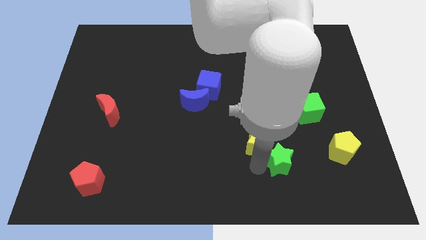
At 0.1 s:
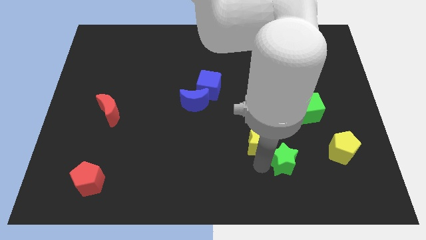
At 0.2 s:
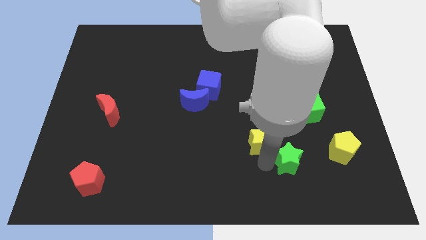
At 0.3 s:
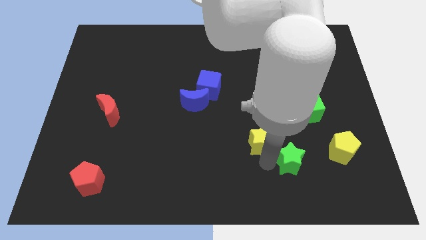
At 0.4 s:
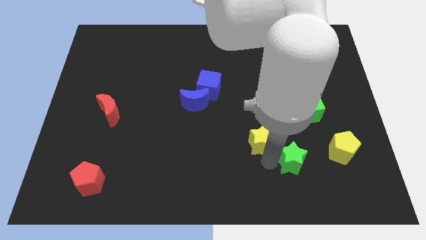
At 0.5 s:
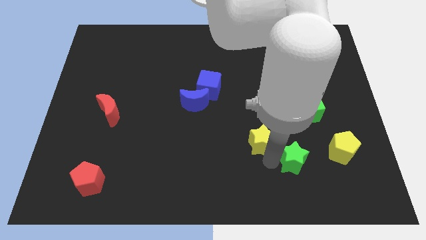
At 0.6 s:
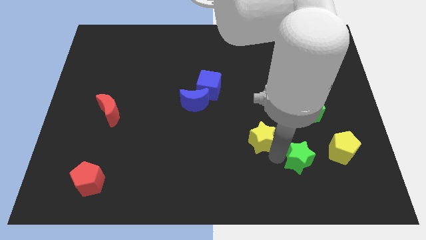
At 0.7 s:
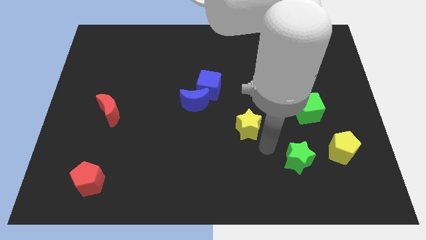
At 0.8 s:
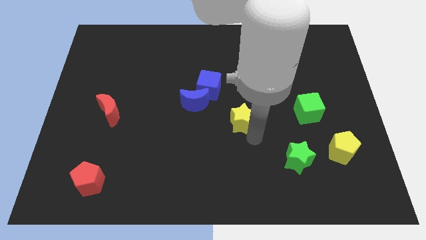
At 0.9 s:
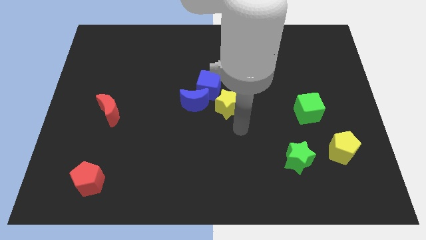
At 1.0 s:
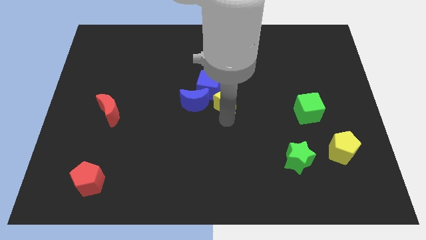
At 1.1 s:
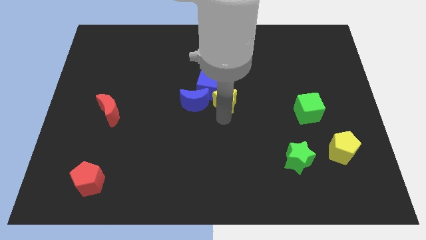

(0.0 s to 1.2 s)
place yellow star below blue cube

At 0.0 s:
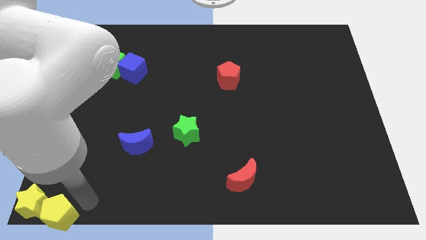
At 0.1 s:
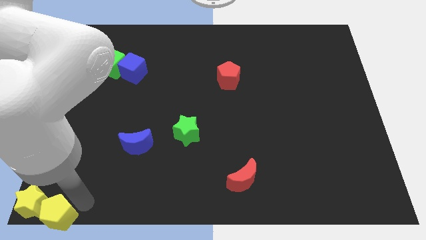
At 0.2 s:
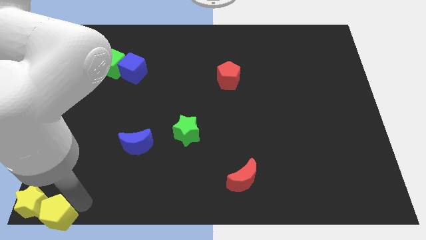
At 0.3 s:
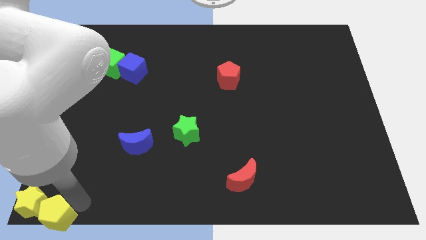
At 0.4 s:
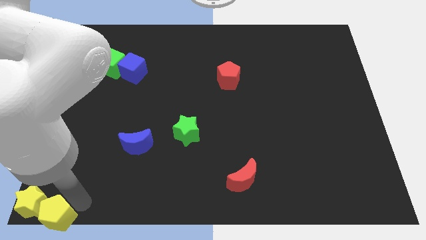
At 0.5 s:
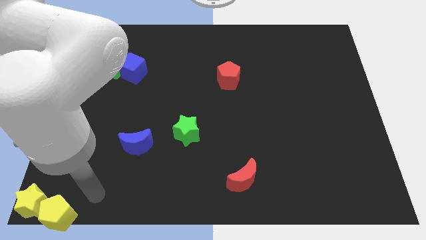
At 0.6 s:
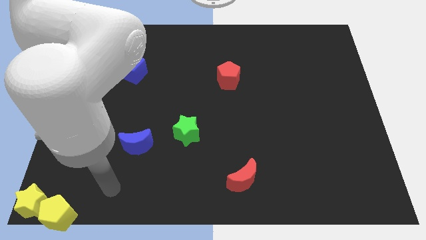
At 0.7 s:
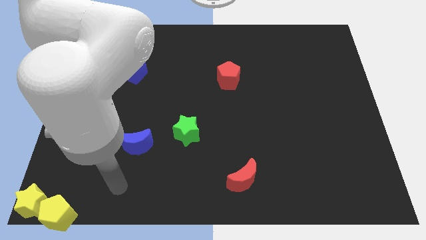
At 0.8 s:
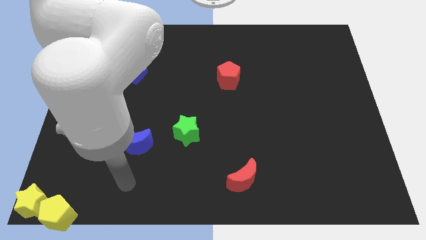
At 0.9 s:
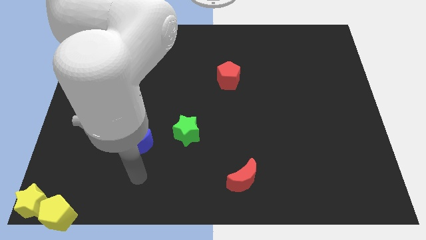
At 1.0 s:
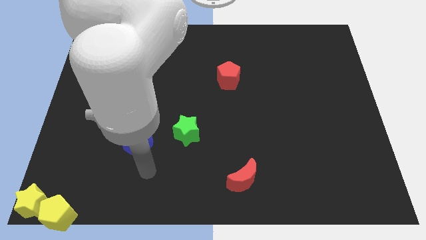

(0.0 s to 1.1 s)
move your hand away from yellow pentagon

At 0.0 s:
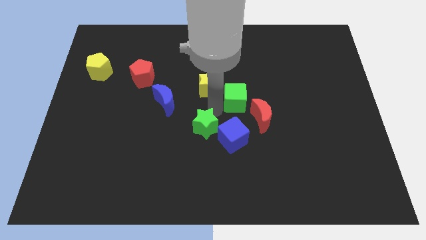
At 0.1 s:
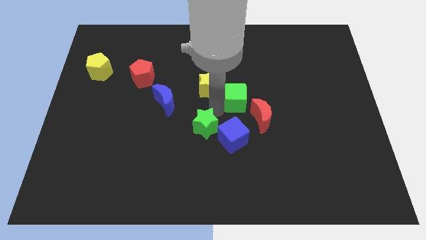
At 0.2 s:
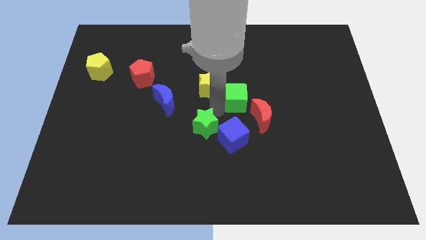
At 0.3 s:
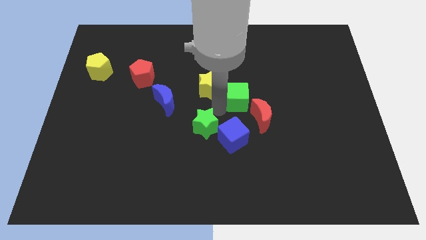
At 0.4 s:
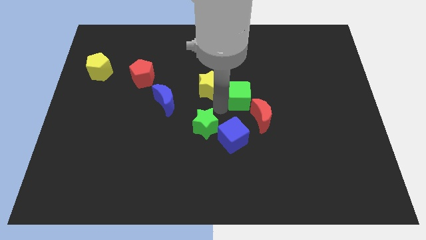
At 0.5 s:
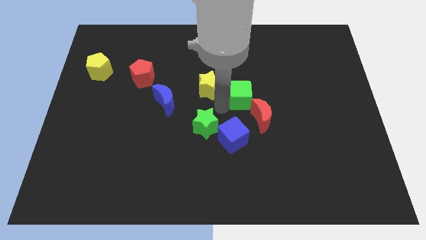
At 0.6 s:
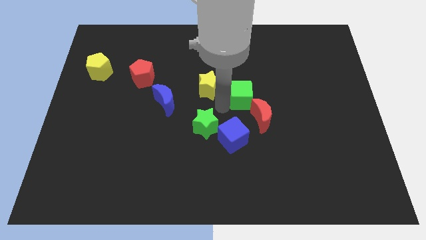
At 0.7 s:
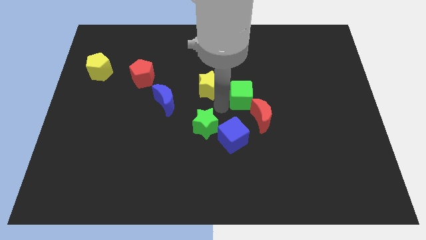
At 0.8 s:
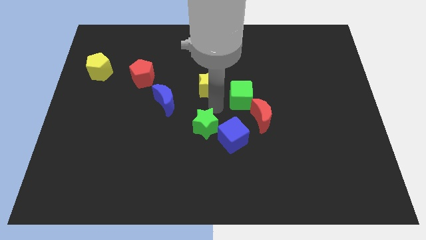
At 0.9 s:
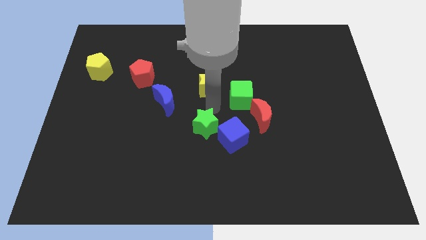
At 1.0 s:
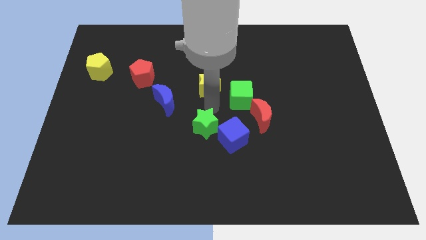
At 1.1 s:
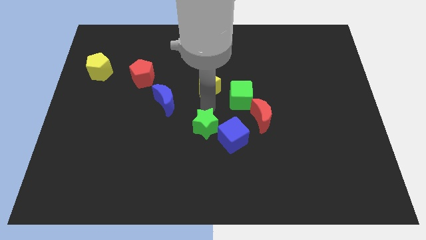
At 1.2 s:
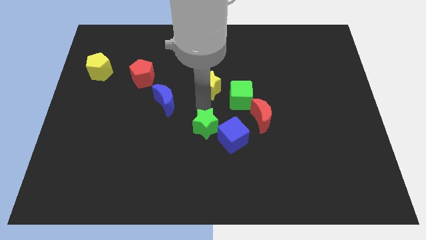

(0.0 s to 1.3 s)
move the green cube close to the red crescent

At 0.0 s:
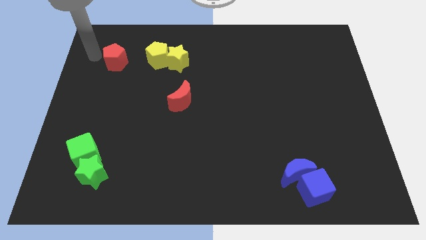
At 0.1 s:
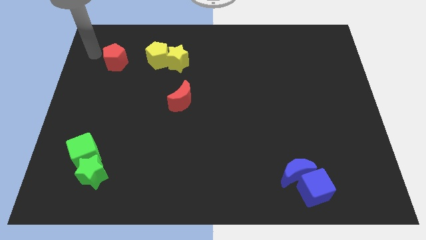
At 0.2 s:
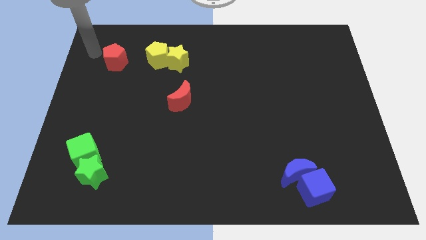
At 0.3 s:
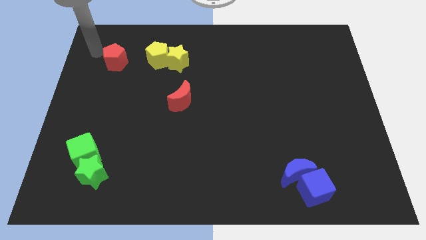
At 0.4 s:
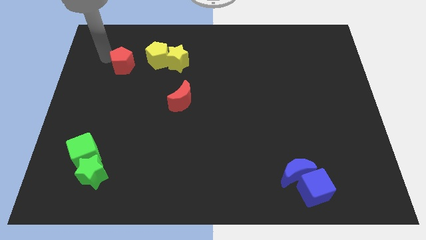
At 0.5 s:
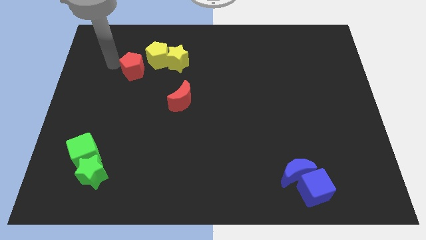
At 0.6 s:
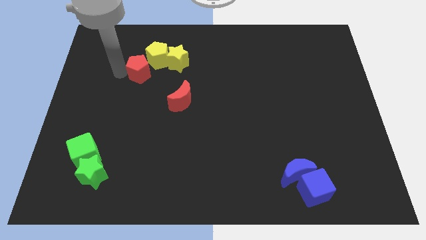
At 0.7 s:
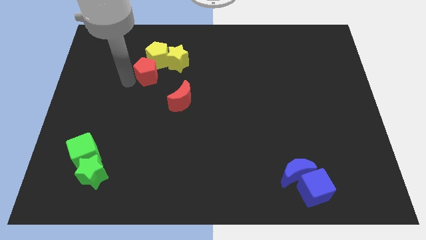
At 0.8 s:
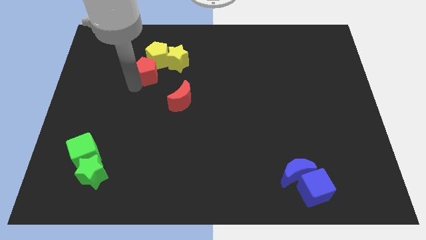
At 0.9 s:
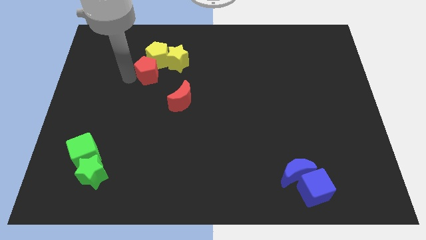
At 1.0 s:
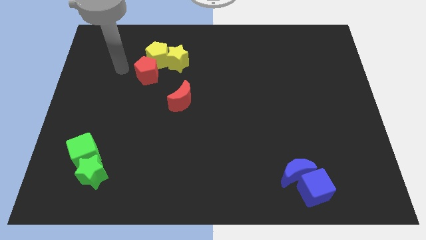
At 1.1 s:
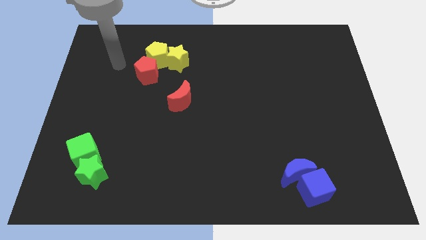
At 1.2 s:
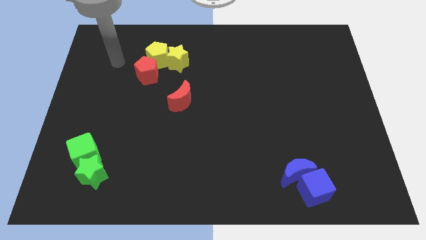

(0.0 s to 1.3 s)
move the red pentagon to the bottom side of the yellow pentagon

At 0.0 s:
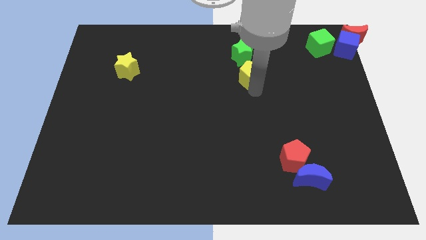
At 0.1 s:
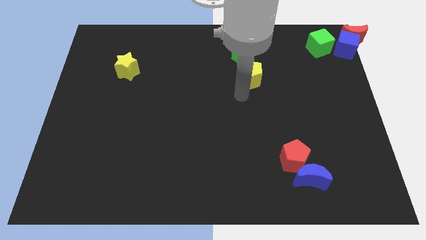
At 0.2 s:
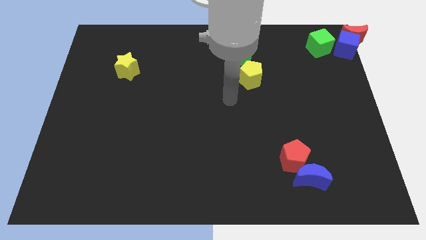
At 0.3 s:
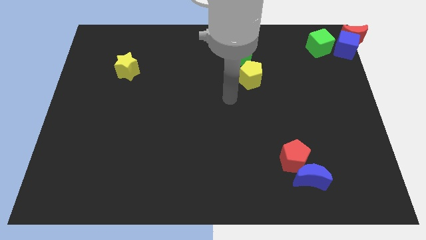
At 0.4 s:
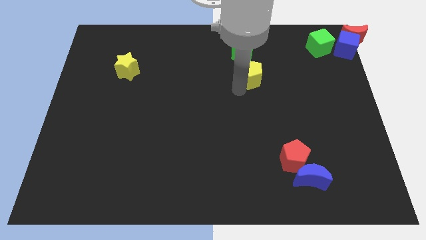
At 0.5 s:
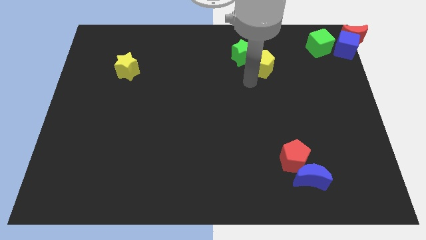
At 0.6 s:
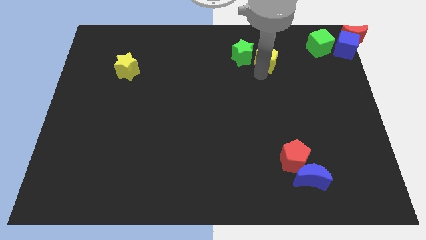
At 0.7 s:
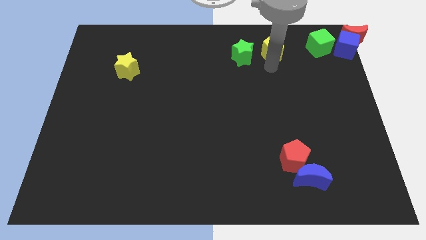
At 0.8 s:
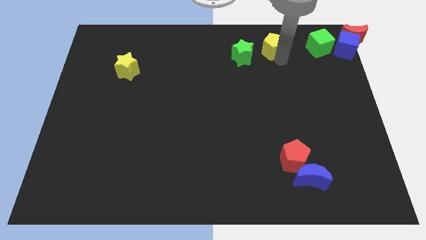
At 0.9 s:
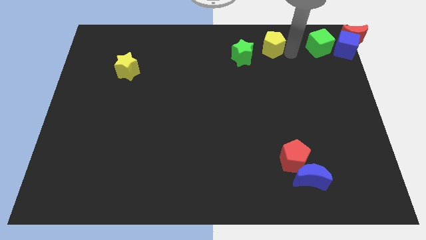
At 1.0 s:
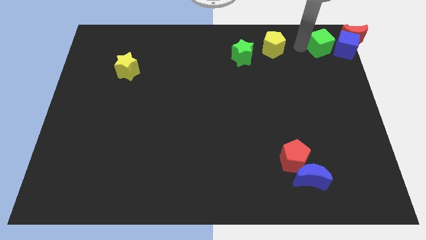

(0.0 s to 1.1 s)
place the yellow pentagon in between the green star and green cube

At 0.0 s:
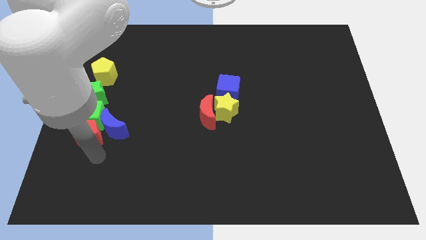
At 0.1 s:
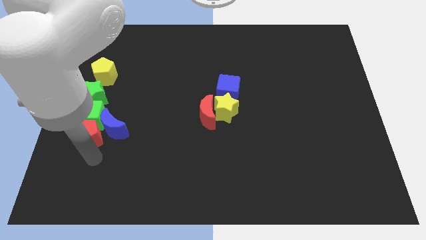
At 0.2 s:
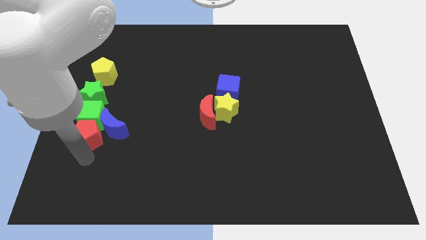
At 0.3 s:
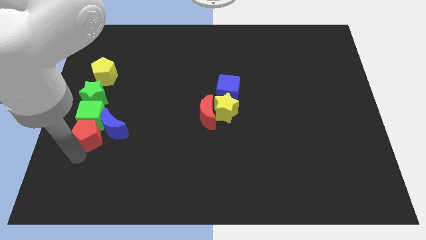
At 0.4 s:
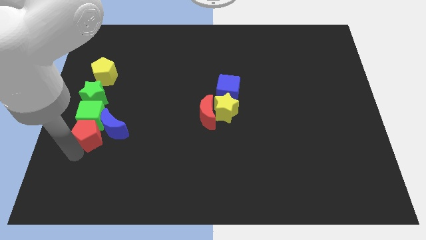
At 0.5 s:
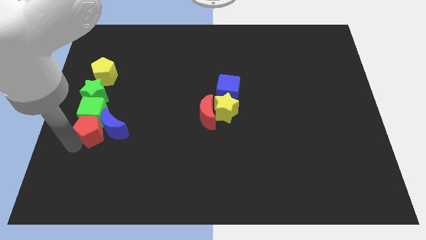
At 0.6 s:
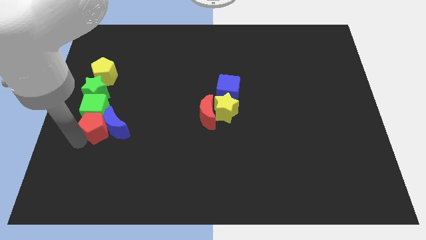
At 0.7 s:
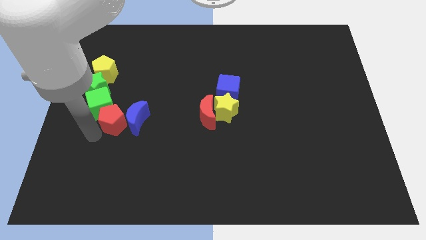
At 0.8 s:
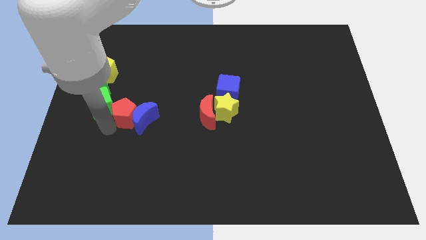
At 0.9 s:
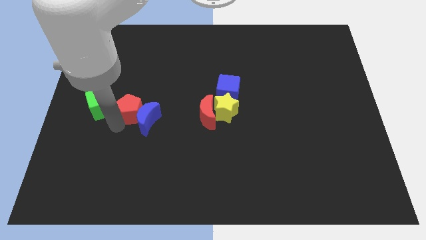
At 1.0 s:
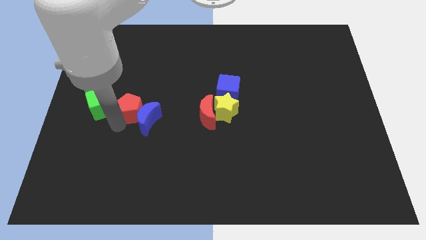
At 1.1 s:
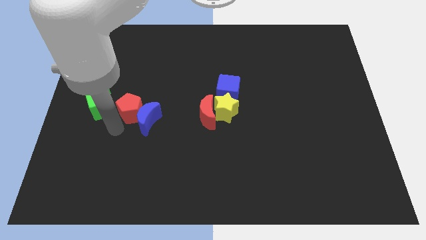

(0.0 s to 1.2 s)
place red pentagon to the left of the blue moon

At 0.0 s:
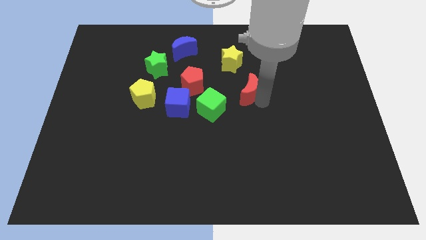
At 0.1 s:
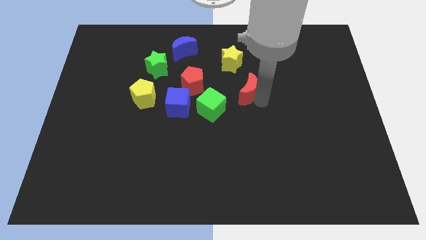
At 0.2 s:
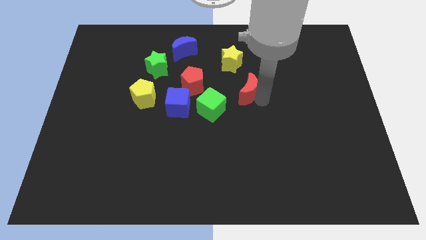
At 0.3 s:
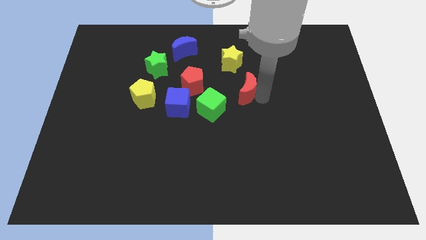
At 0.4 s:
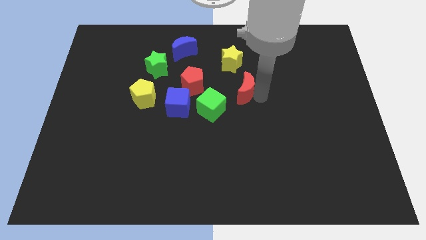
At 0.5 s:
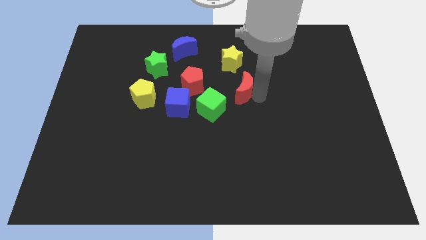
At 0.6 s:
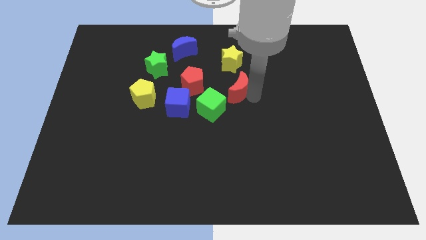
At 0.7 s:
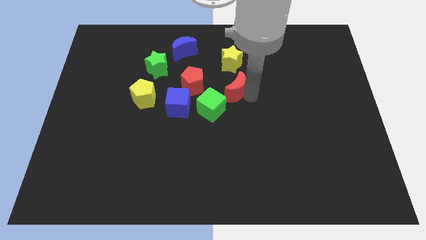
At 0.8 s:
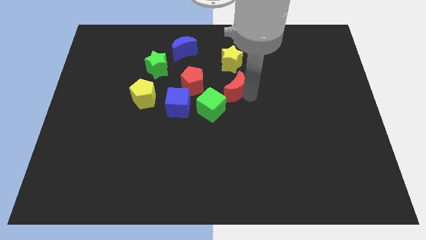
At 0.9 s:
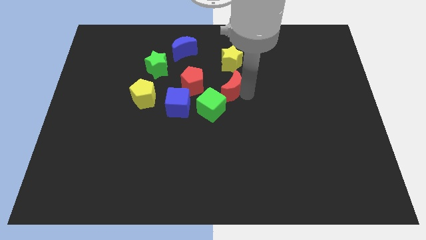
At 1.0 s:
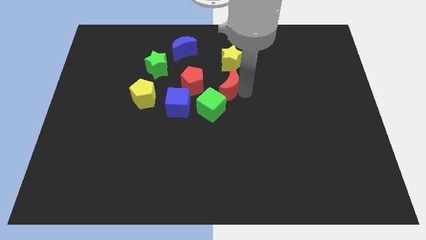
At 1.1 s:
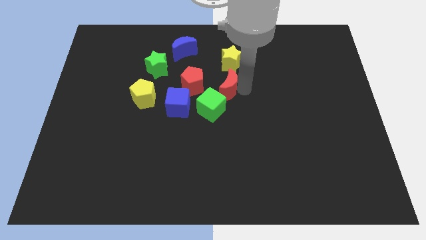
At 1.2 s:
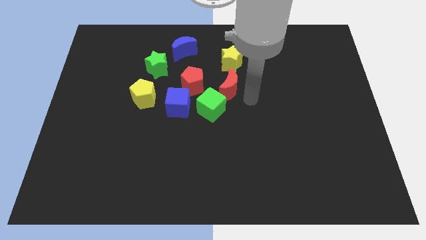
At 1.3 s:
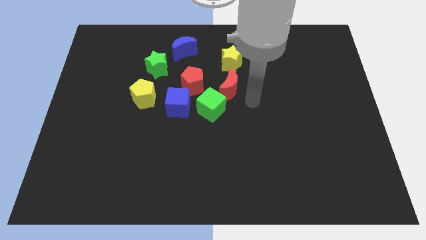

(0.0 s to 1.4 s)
place the red moon right to the red pentagon

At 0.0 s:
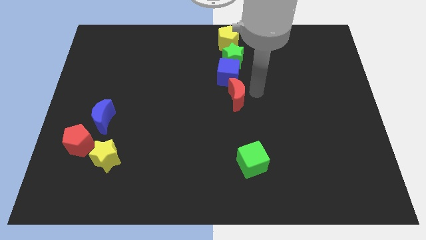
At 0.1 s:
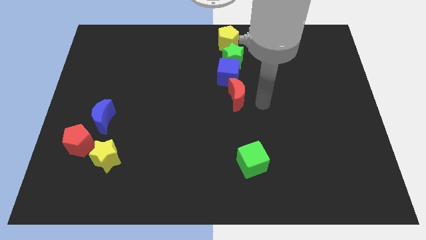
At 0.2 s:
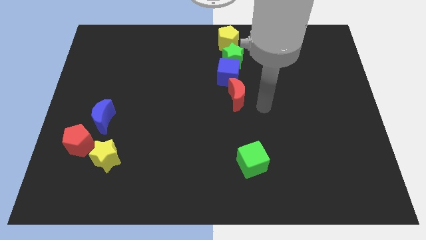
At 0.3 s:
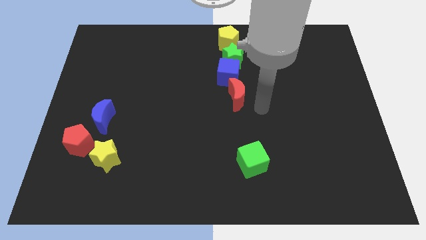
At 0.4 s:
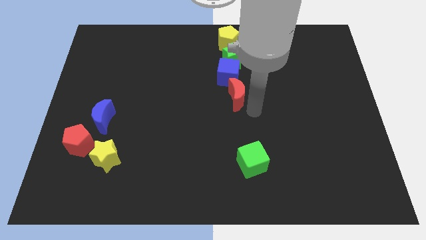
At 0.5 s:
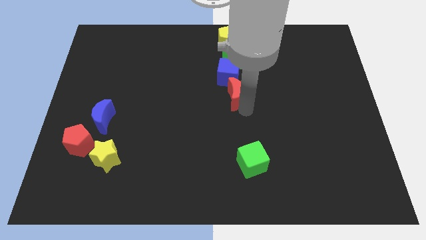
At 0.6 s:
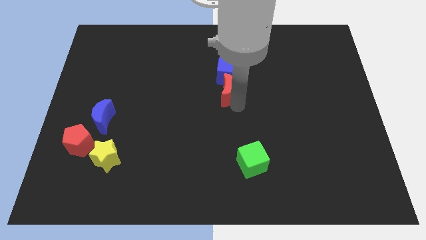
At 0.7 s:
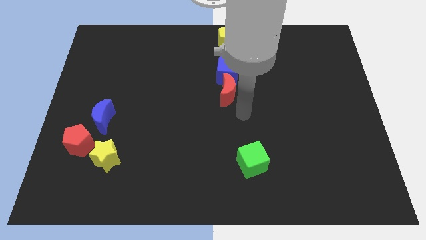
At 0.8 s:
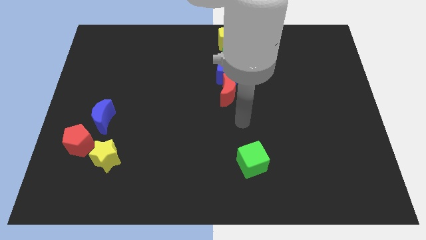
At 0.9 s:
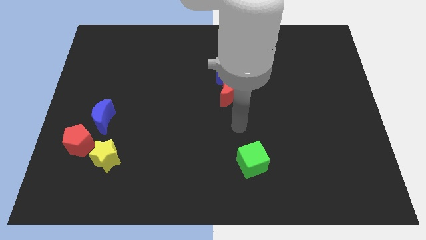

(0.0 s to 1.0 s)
push the red crescent slightly left of the board
